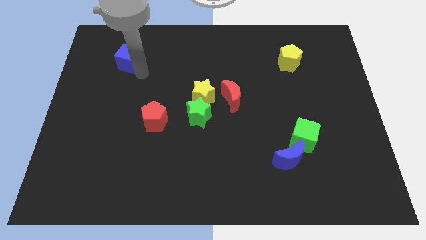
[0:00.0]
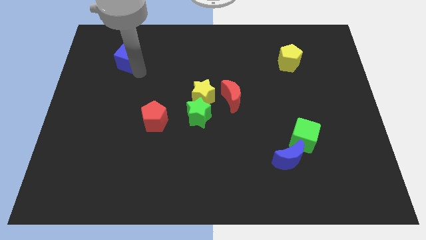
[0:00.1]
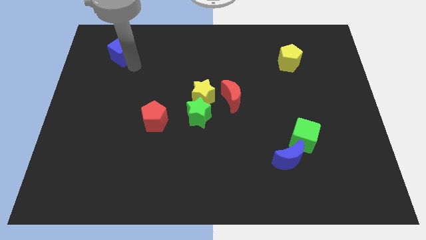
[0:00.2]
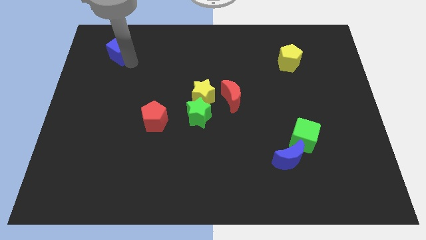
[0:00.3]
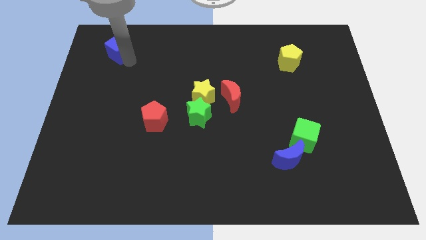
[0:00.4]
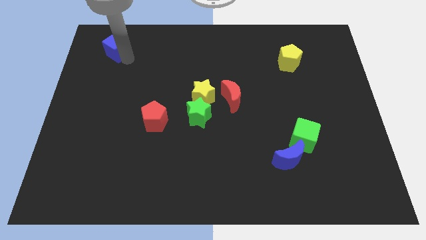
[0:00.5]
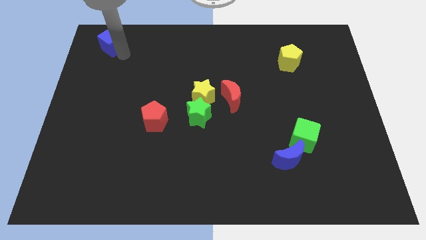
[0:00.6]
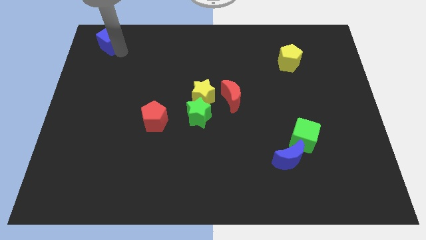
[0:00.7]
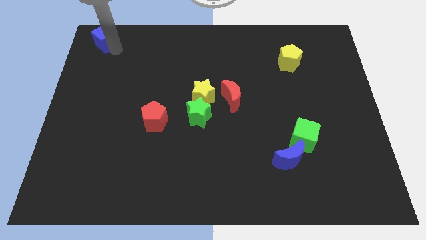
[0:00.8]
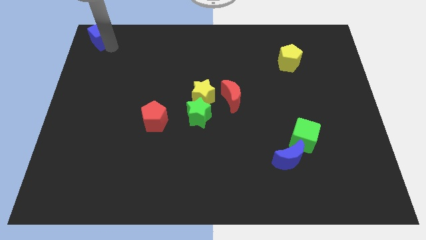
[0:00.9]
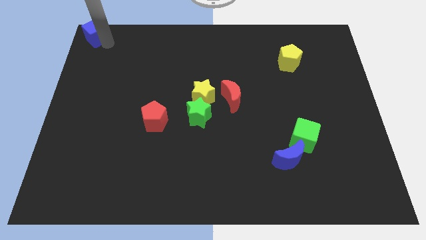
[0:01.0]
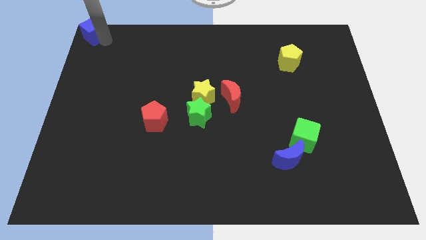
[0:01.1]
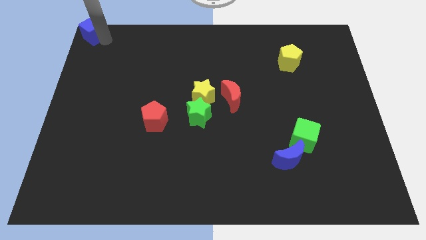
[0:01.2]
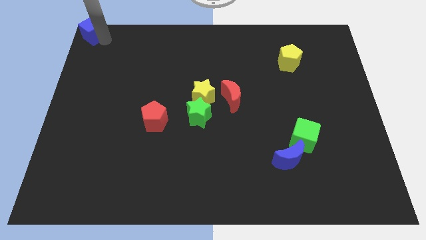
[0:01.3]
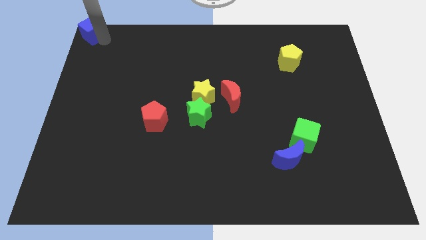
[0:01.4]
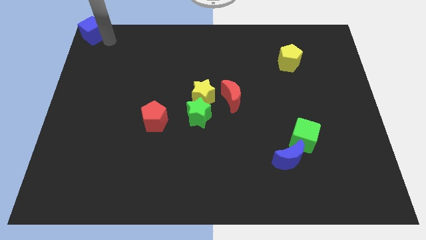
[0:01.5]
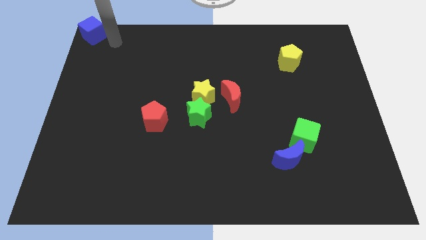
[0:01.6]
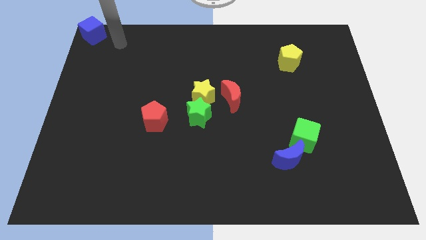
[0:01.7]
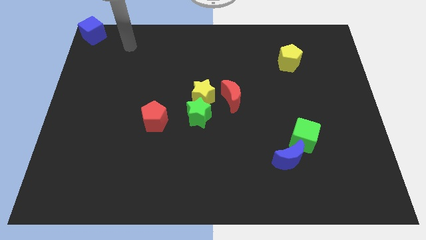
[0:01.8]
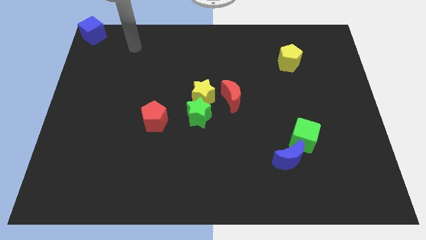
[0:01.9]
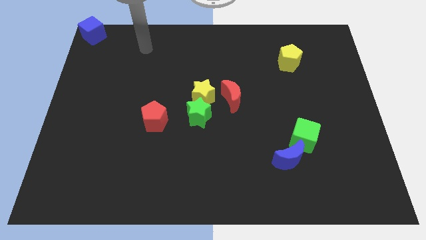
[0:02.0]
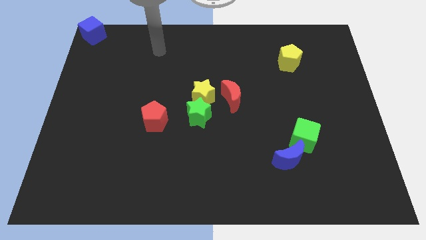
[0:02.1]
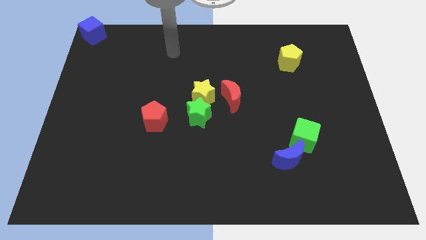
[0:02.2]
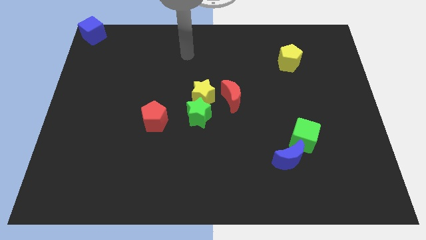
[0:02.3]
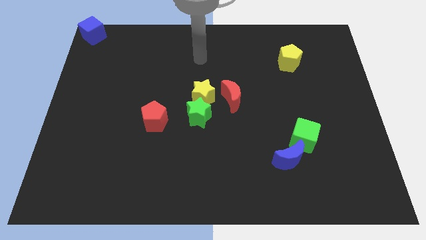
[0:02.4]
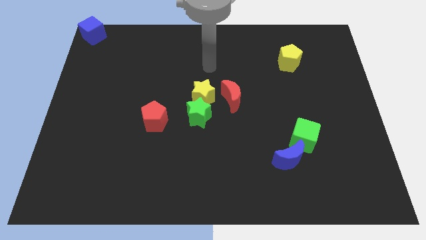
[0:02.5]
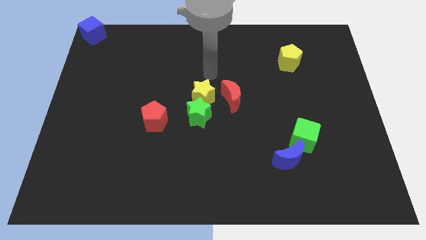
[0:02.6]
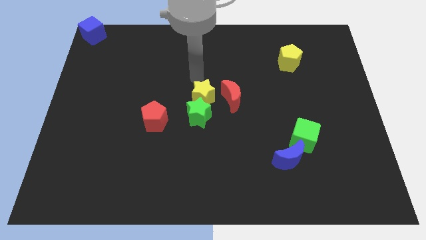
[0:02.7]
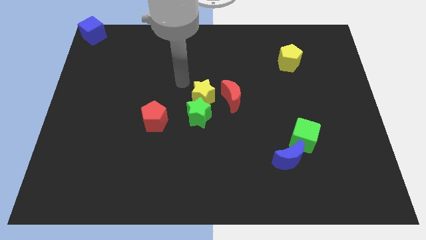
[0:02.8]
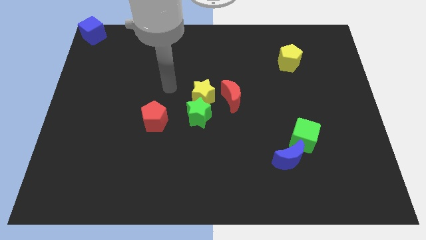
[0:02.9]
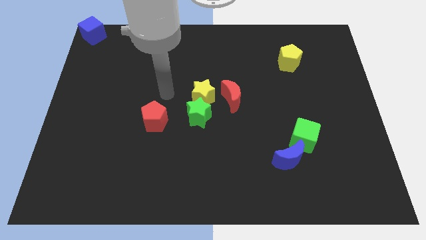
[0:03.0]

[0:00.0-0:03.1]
push the blue cube to the top left corner of the board

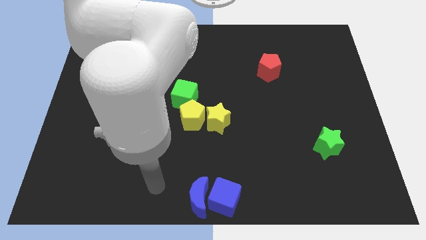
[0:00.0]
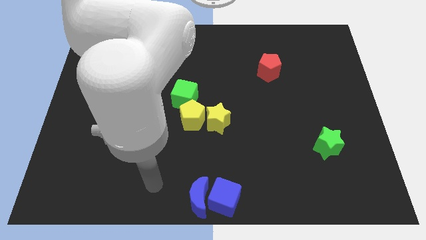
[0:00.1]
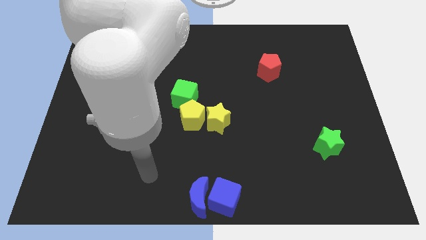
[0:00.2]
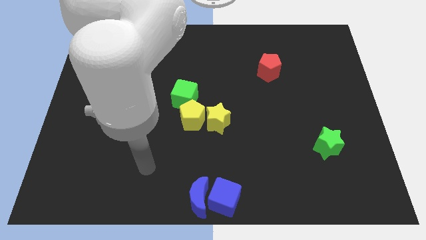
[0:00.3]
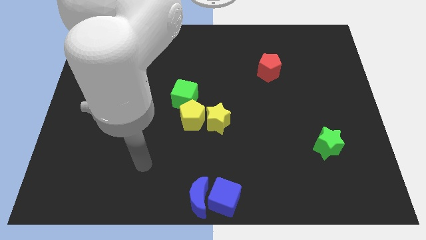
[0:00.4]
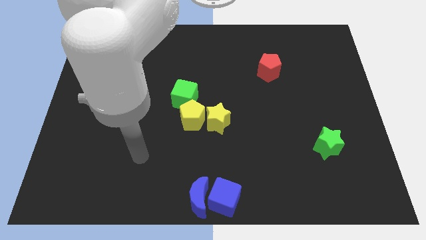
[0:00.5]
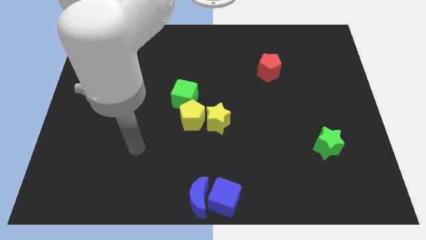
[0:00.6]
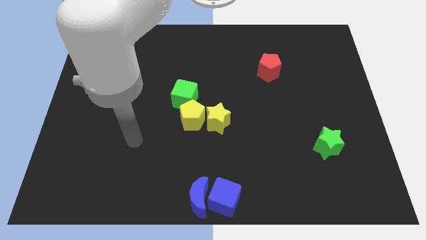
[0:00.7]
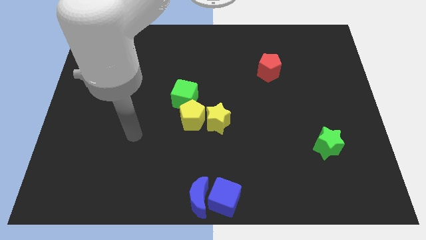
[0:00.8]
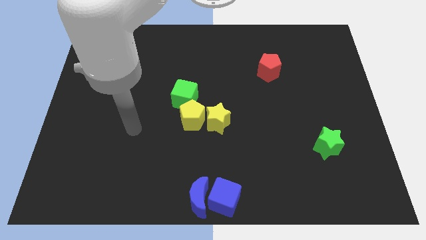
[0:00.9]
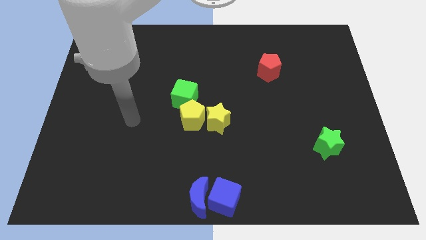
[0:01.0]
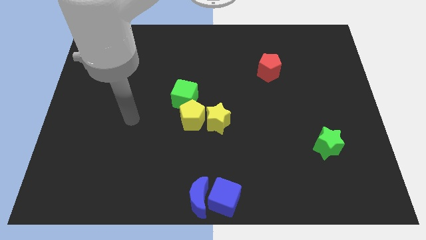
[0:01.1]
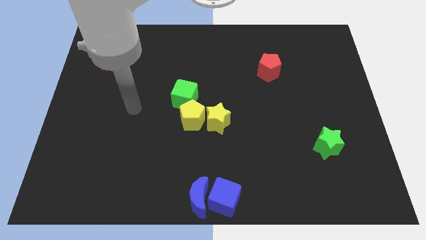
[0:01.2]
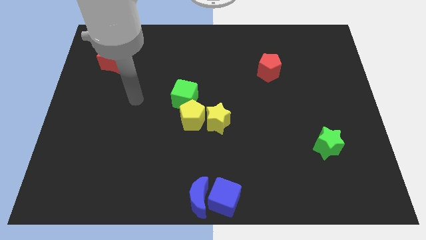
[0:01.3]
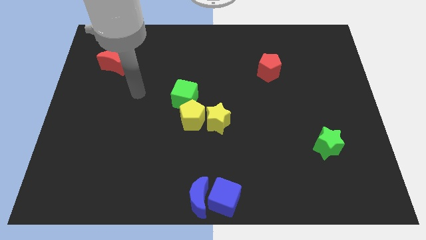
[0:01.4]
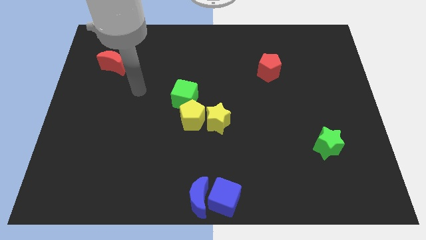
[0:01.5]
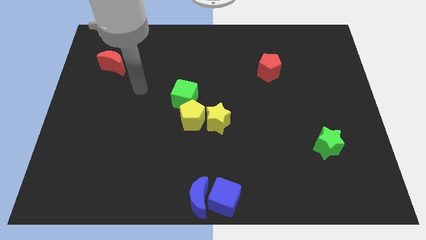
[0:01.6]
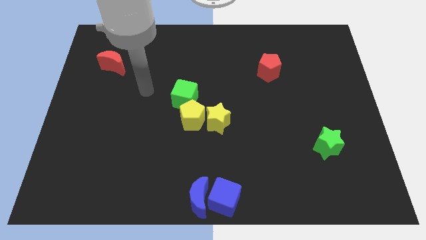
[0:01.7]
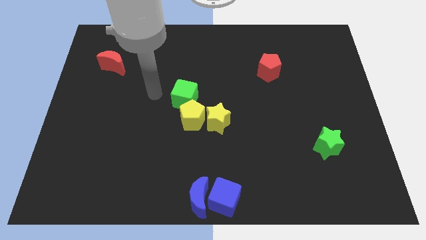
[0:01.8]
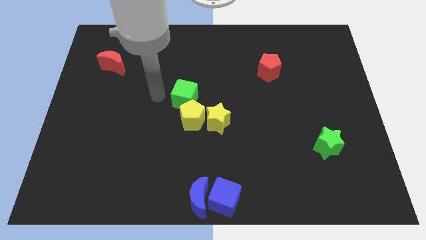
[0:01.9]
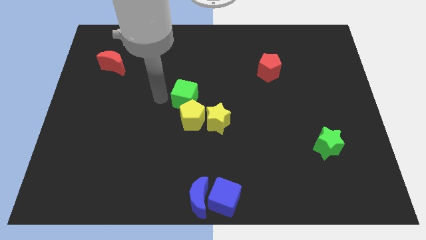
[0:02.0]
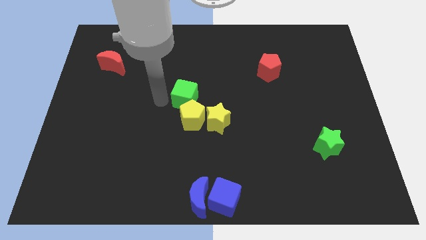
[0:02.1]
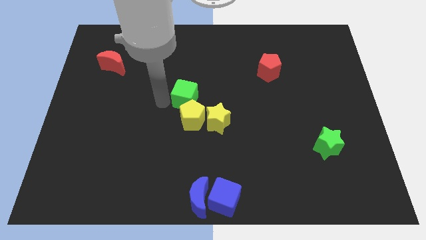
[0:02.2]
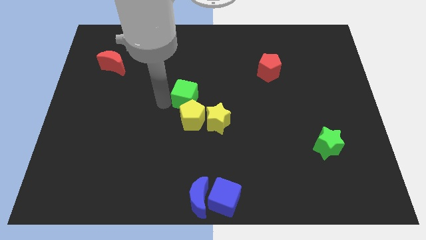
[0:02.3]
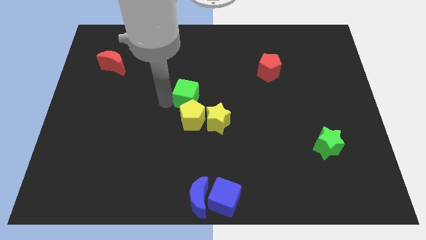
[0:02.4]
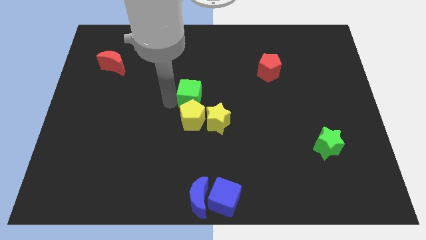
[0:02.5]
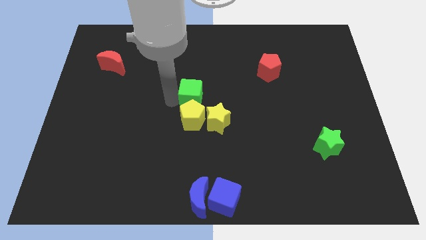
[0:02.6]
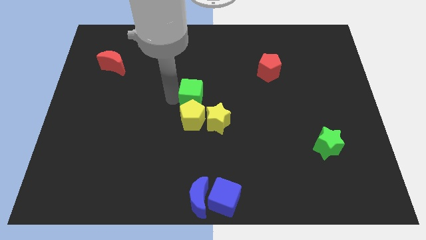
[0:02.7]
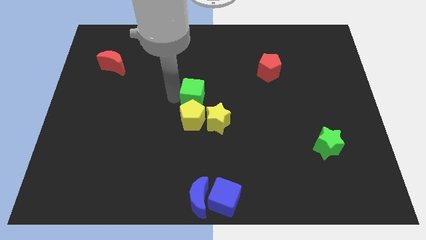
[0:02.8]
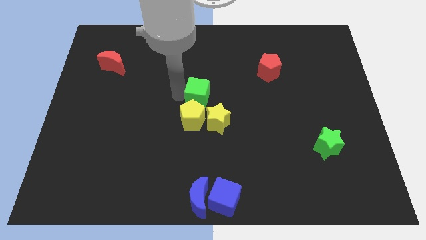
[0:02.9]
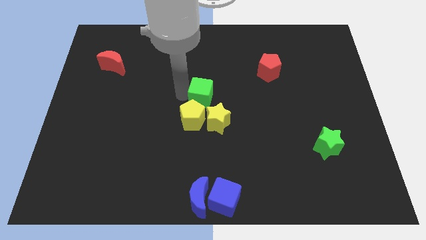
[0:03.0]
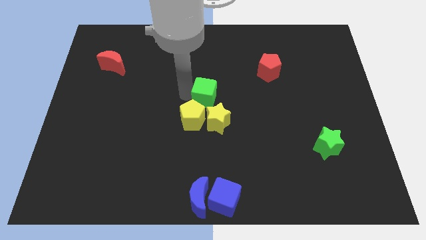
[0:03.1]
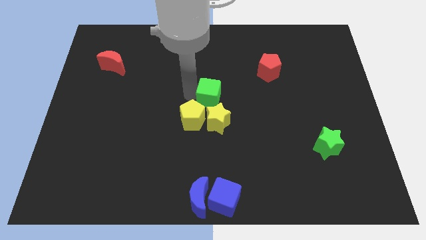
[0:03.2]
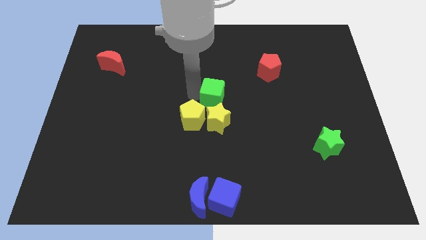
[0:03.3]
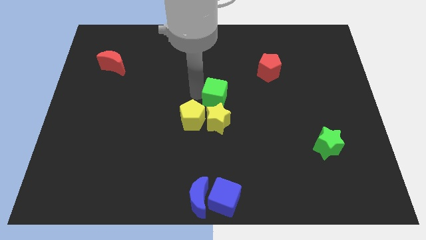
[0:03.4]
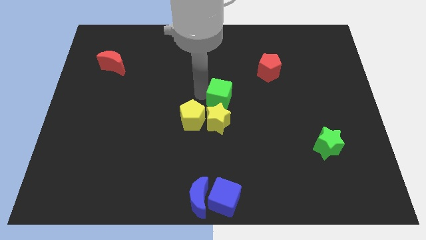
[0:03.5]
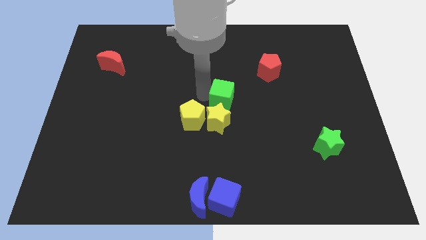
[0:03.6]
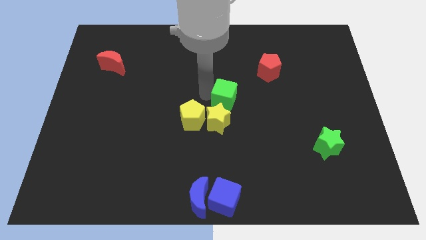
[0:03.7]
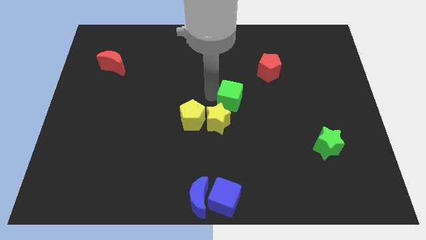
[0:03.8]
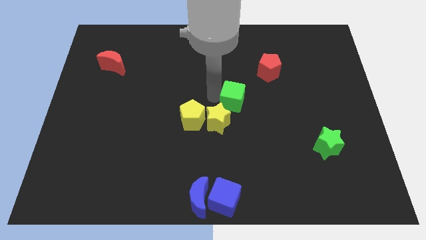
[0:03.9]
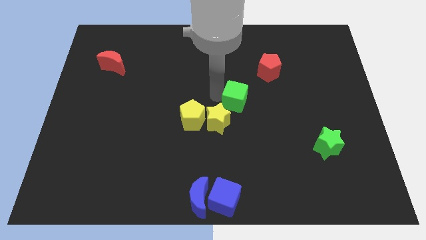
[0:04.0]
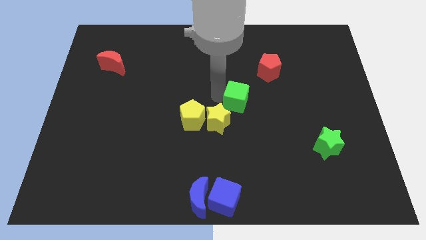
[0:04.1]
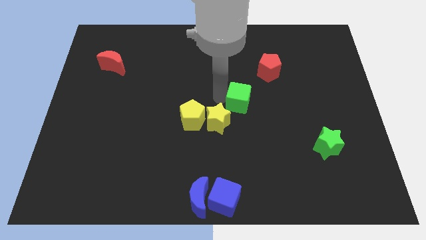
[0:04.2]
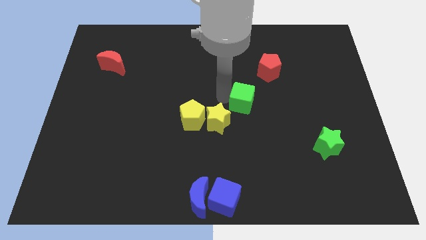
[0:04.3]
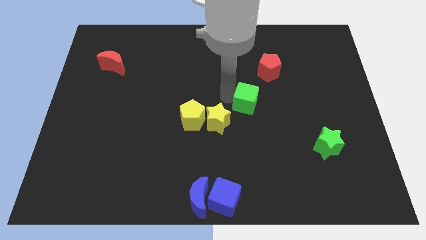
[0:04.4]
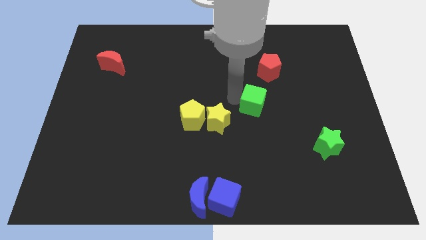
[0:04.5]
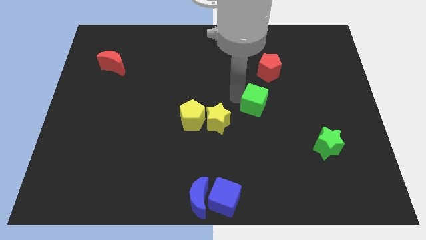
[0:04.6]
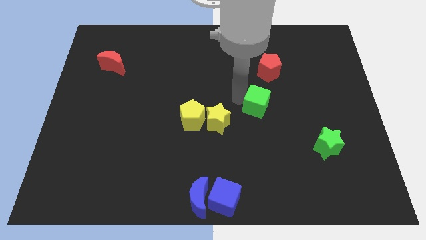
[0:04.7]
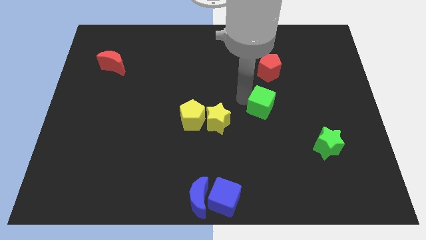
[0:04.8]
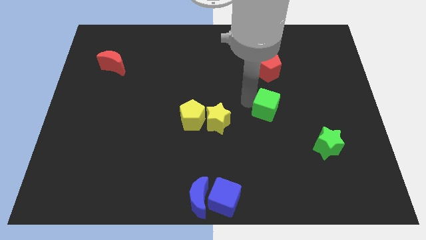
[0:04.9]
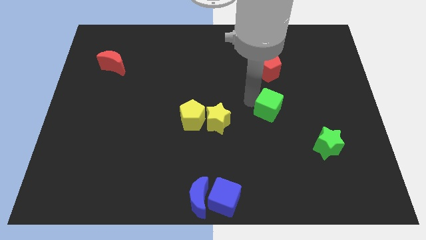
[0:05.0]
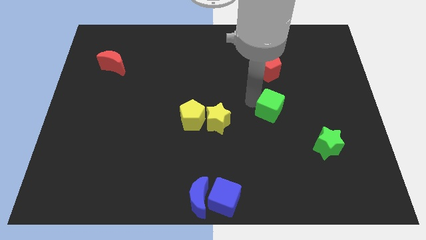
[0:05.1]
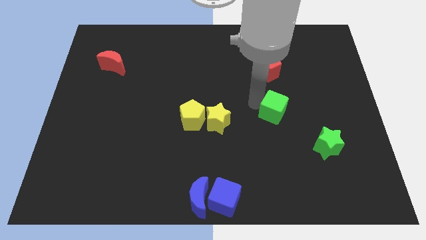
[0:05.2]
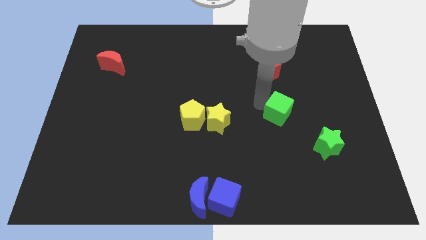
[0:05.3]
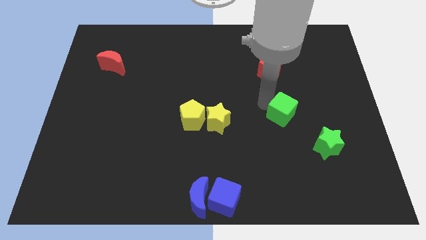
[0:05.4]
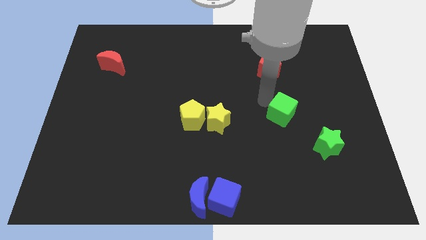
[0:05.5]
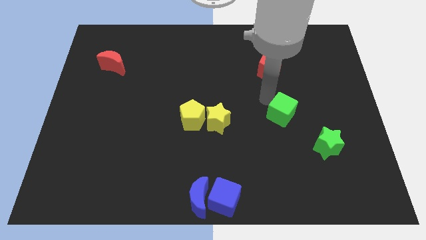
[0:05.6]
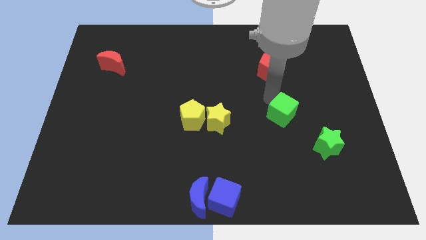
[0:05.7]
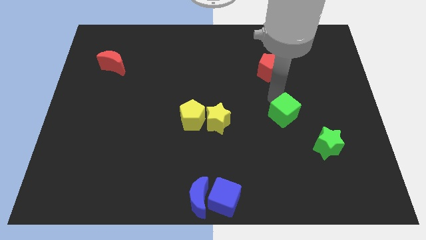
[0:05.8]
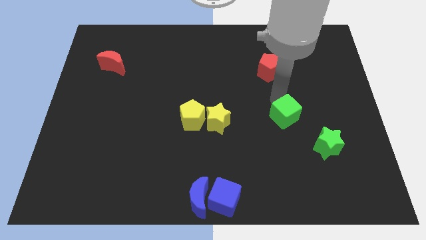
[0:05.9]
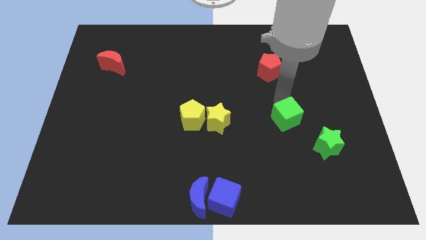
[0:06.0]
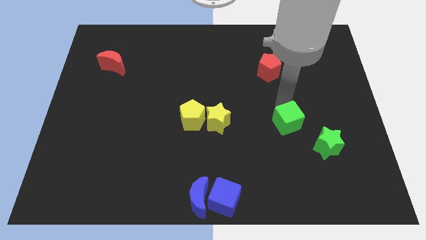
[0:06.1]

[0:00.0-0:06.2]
push the green cube to the right of the yellow star
